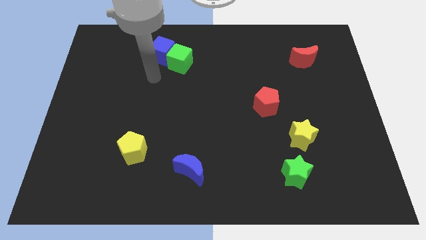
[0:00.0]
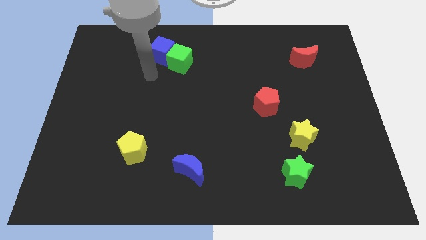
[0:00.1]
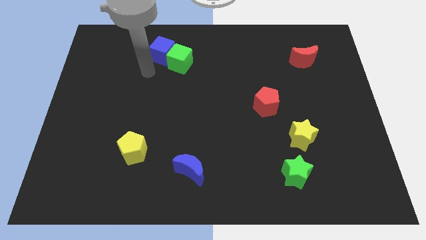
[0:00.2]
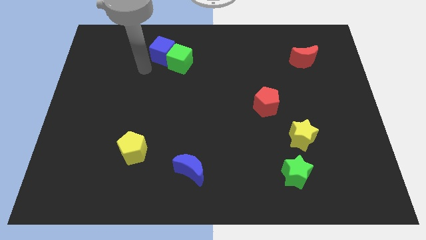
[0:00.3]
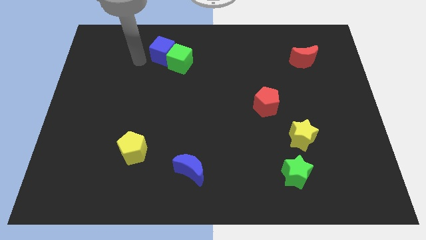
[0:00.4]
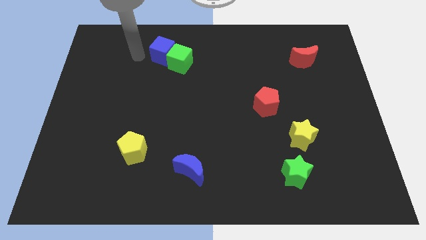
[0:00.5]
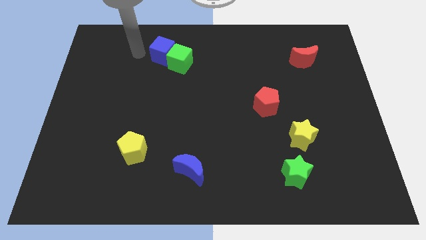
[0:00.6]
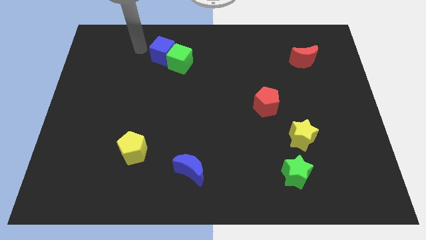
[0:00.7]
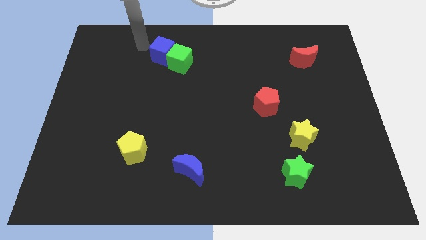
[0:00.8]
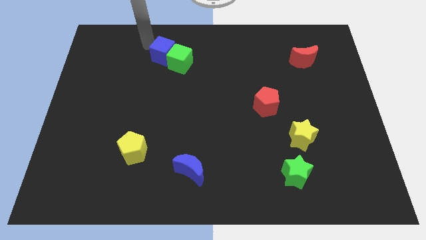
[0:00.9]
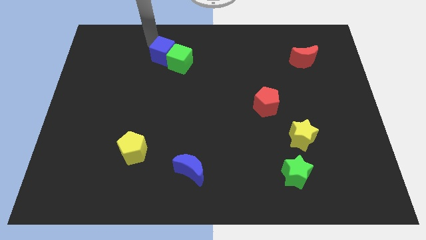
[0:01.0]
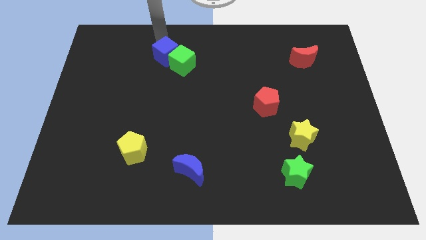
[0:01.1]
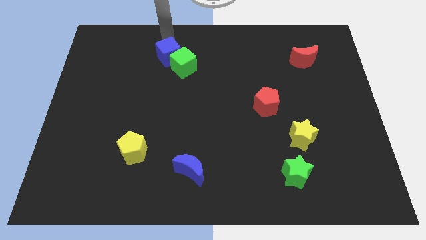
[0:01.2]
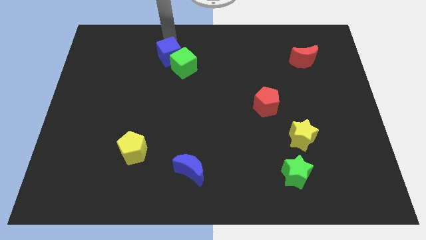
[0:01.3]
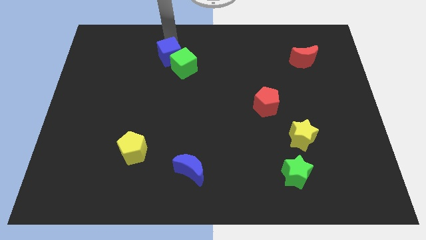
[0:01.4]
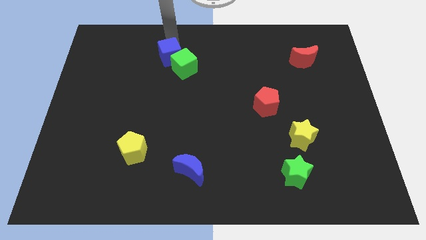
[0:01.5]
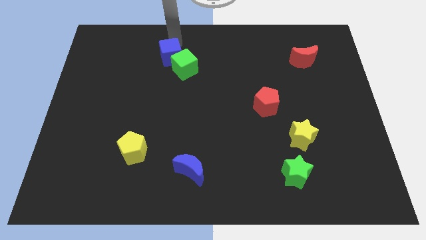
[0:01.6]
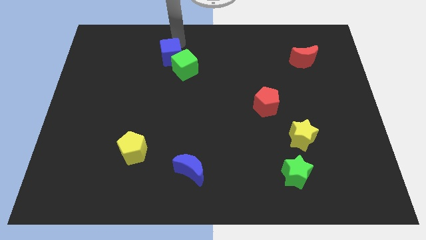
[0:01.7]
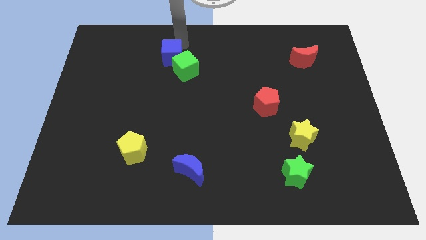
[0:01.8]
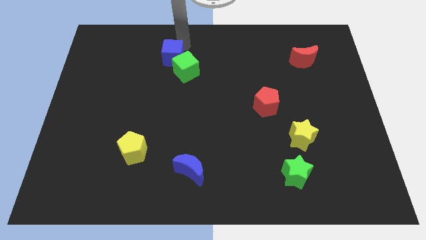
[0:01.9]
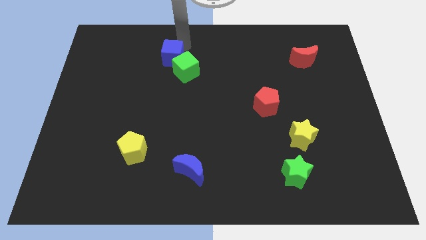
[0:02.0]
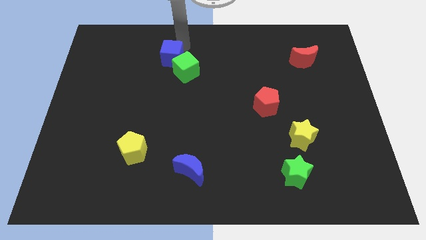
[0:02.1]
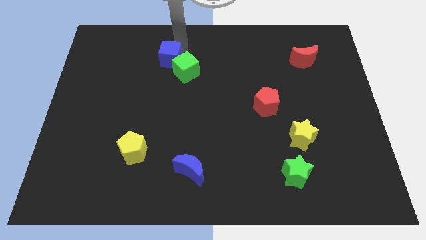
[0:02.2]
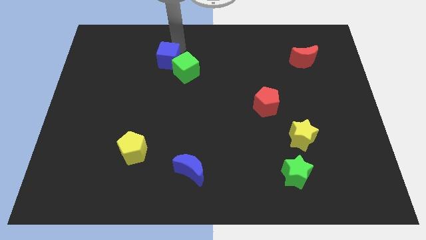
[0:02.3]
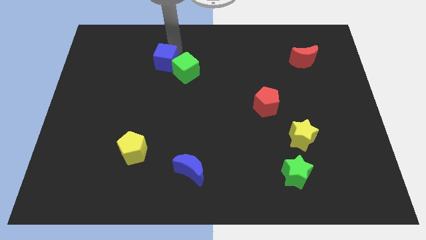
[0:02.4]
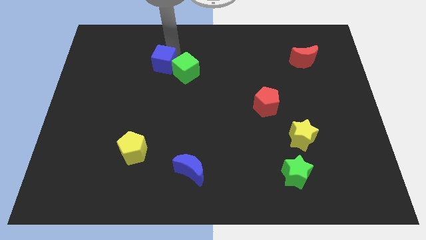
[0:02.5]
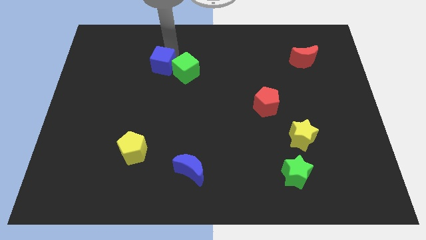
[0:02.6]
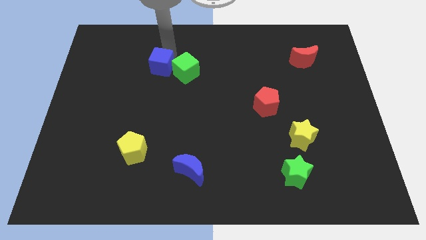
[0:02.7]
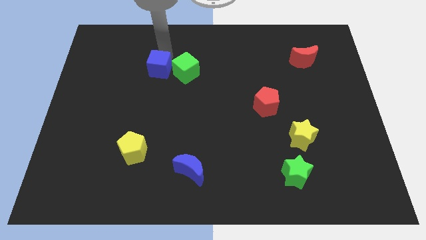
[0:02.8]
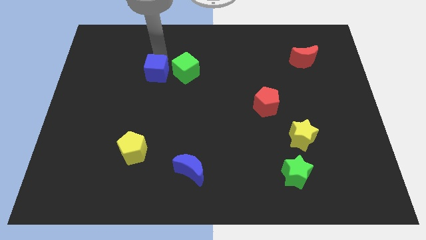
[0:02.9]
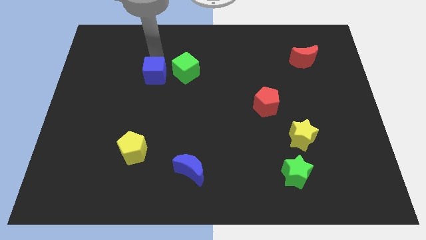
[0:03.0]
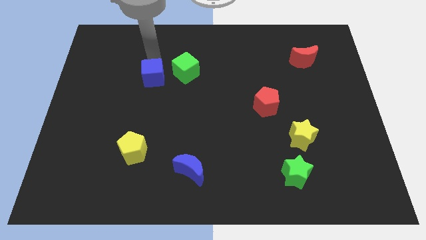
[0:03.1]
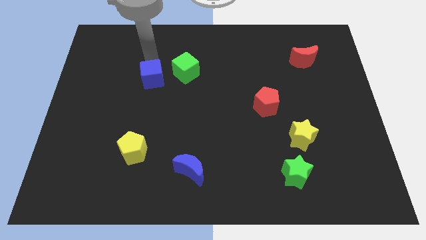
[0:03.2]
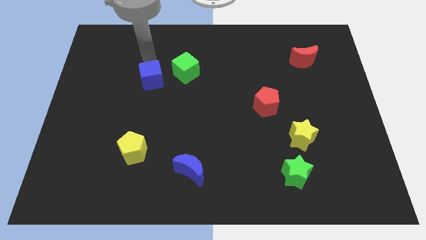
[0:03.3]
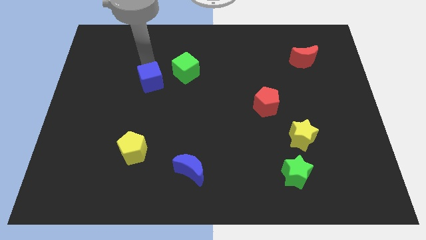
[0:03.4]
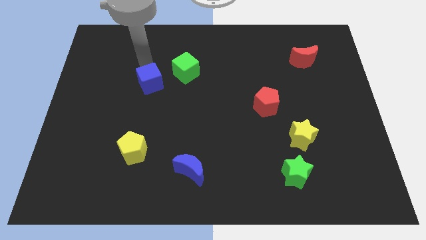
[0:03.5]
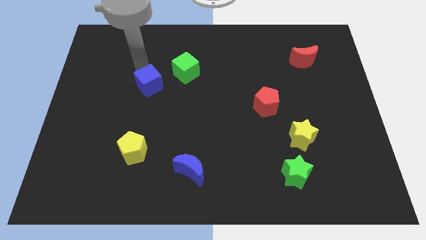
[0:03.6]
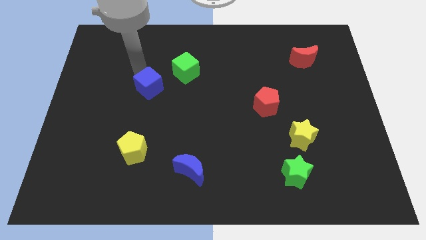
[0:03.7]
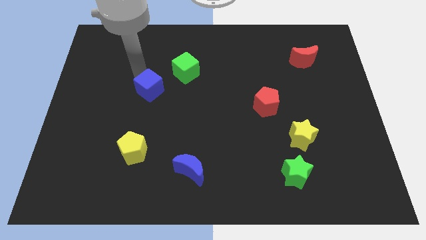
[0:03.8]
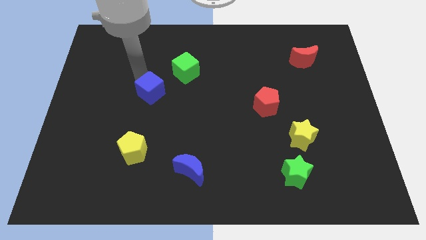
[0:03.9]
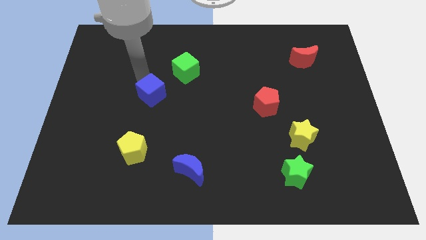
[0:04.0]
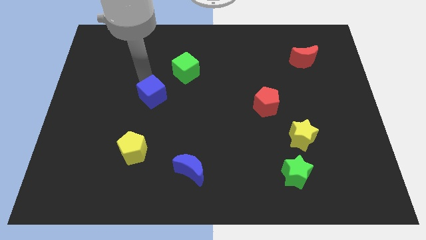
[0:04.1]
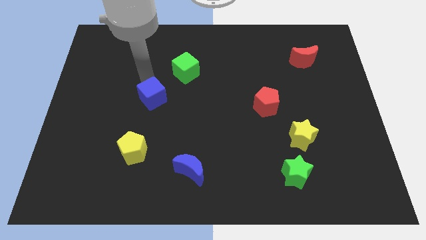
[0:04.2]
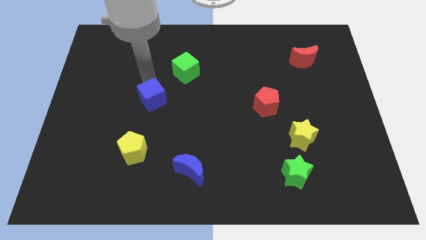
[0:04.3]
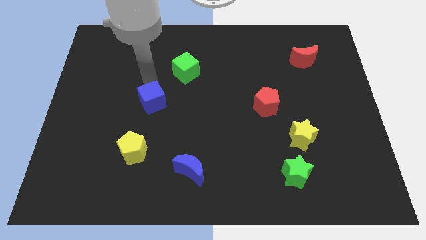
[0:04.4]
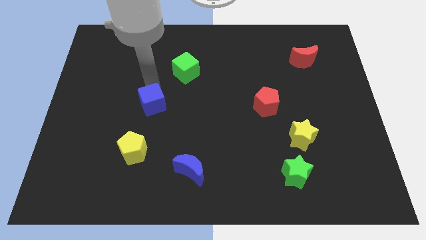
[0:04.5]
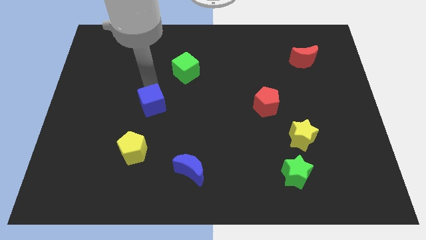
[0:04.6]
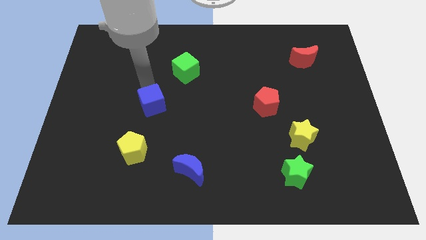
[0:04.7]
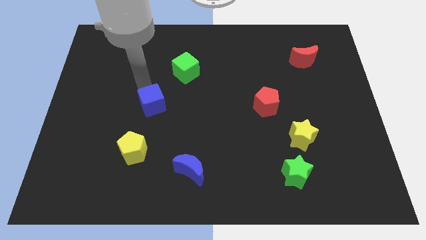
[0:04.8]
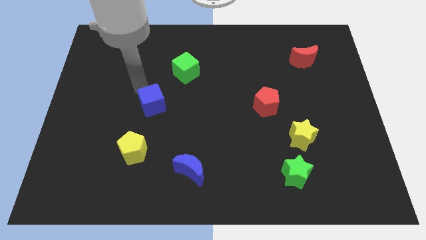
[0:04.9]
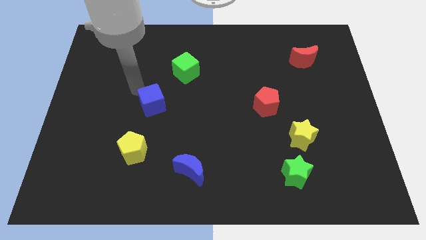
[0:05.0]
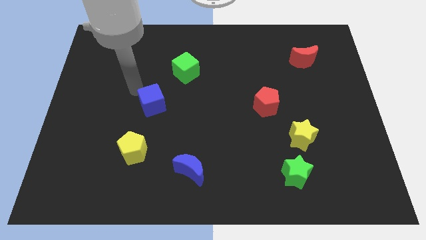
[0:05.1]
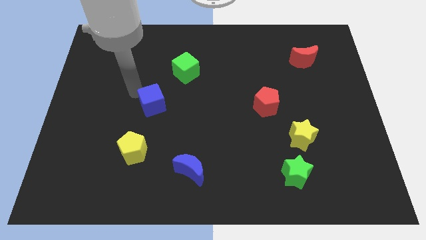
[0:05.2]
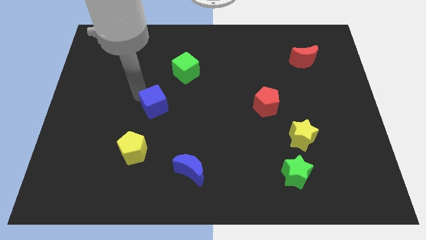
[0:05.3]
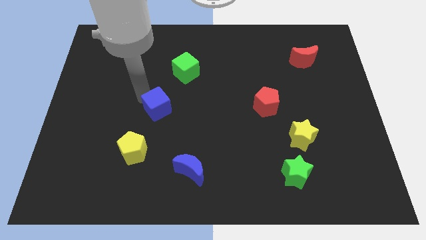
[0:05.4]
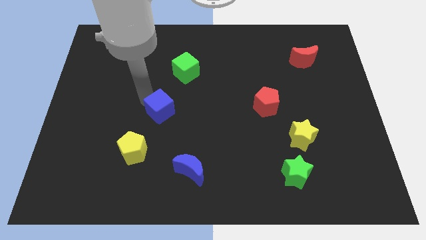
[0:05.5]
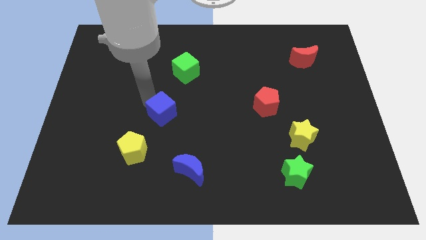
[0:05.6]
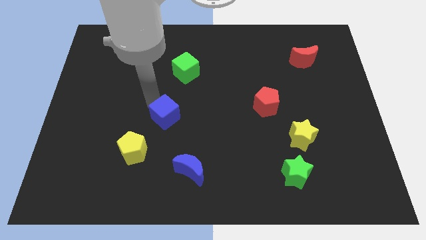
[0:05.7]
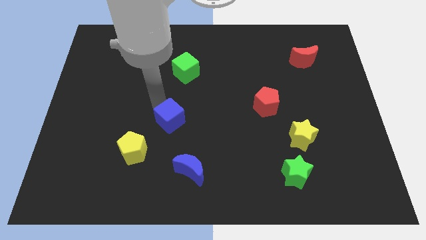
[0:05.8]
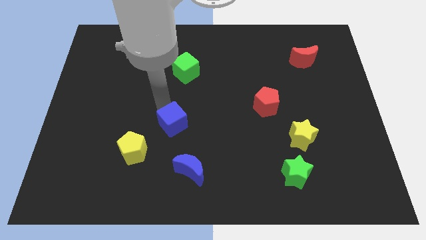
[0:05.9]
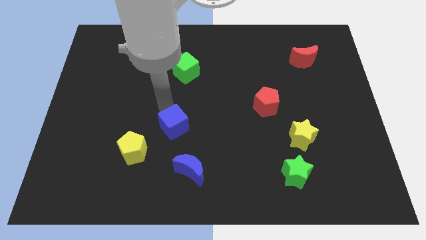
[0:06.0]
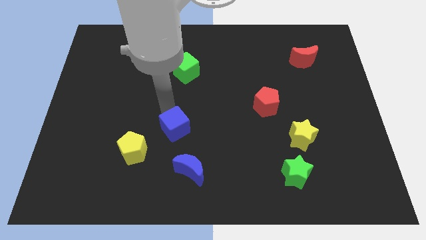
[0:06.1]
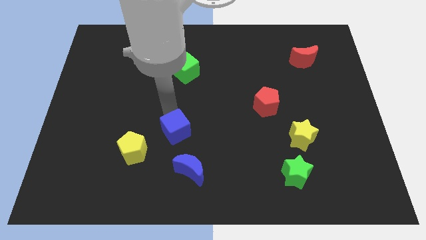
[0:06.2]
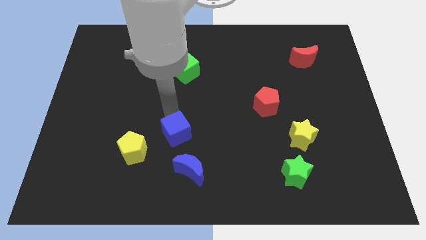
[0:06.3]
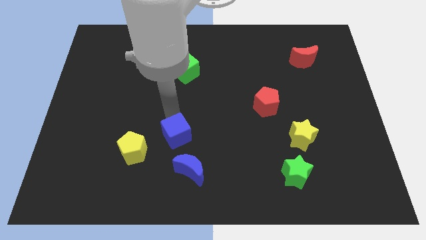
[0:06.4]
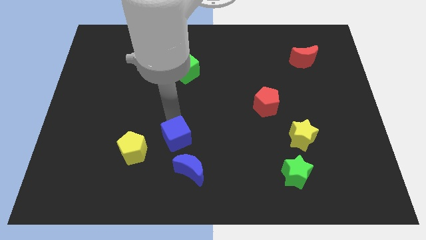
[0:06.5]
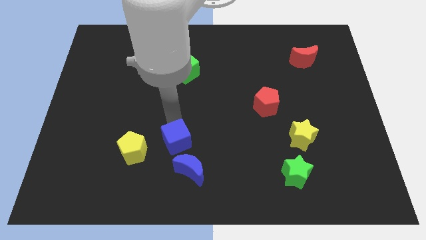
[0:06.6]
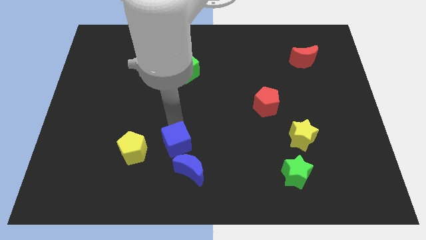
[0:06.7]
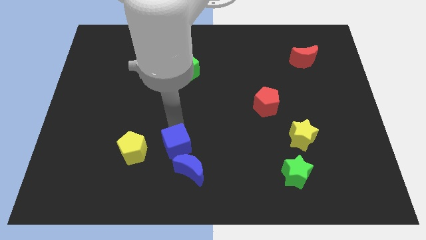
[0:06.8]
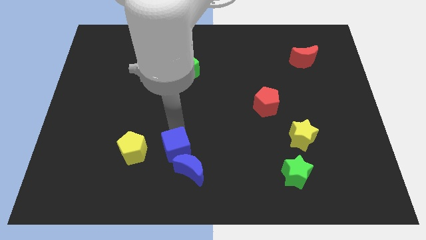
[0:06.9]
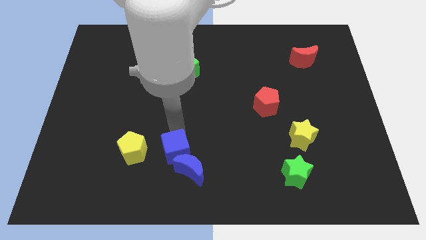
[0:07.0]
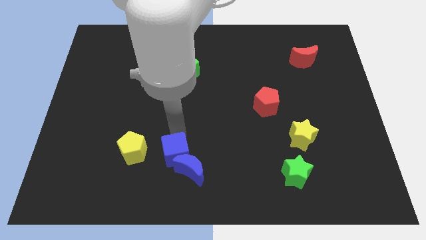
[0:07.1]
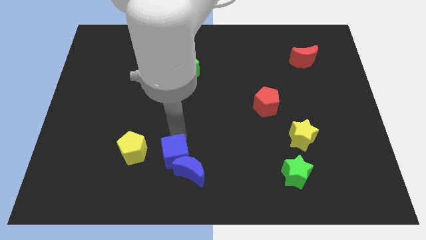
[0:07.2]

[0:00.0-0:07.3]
push the blue cube to the blue moon

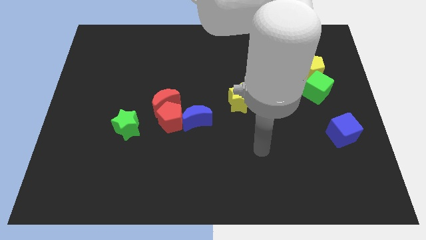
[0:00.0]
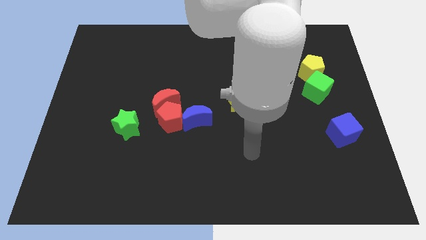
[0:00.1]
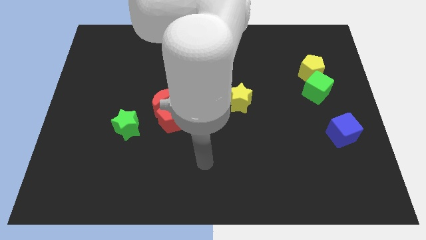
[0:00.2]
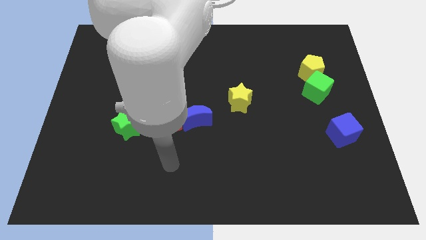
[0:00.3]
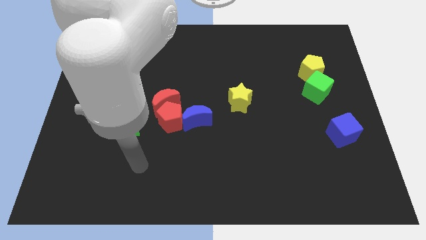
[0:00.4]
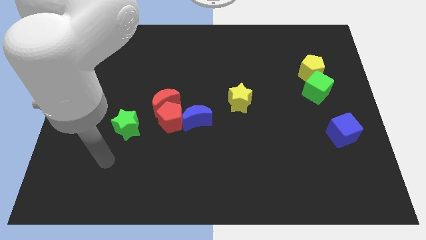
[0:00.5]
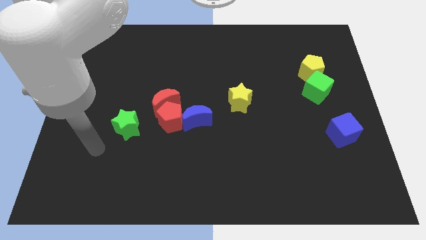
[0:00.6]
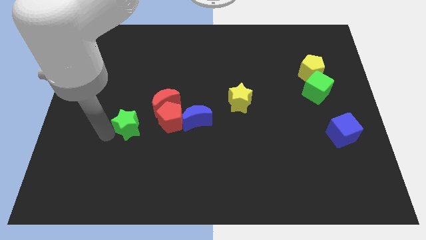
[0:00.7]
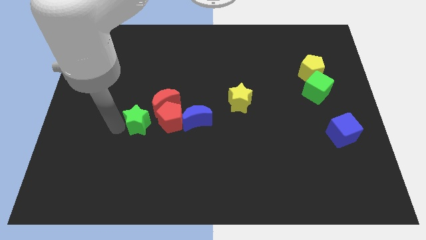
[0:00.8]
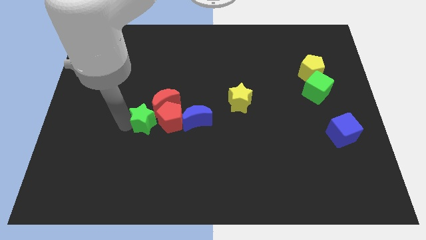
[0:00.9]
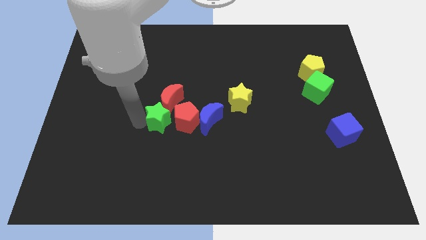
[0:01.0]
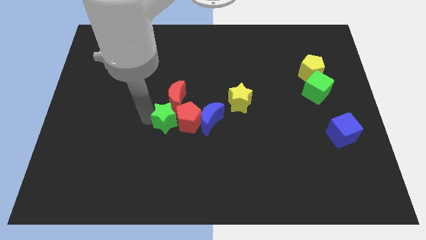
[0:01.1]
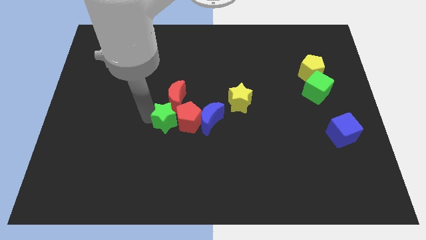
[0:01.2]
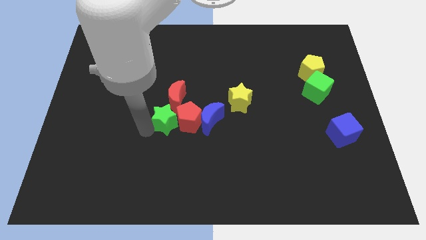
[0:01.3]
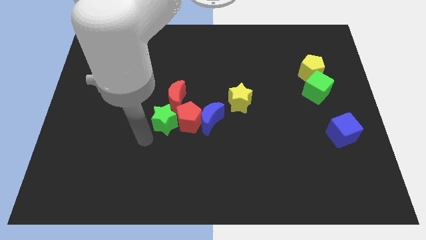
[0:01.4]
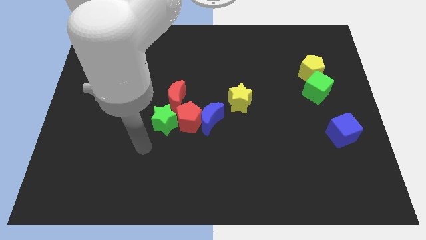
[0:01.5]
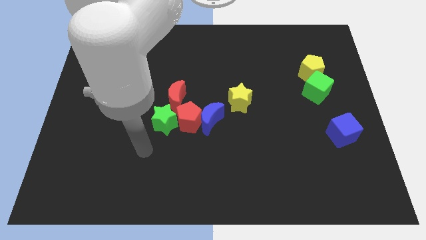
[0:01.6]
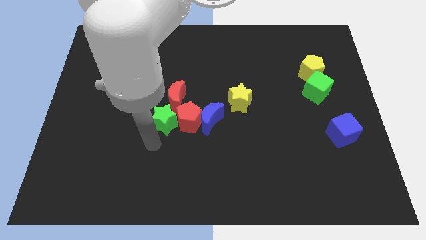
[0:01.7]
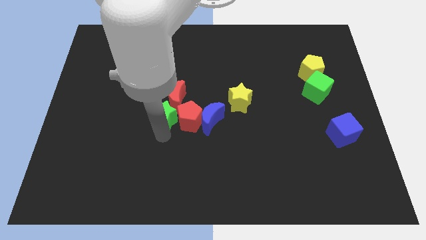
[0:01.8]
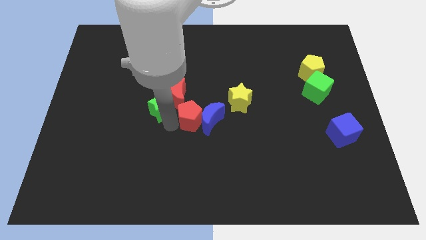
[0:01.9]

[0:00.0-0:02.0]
move the green star to the red moon
